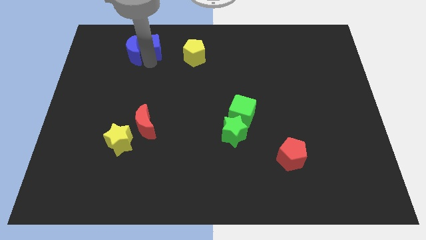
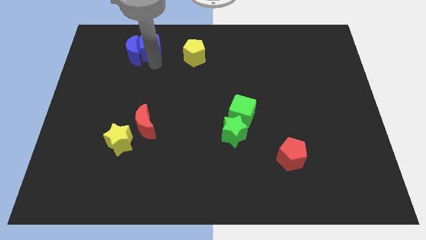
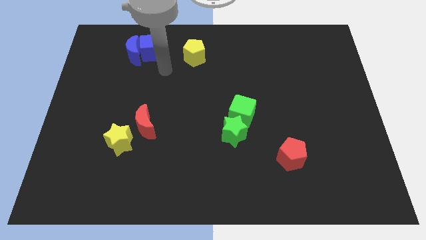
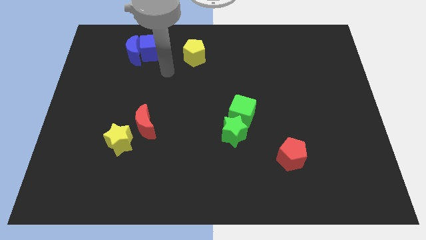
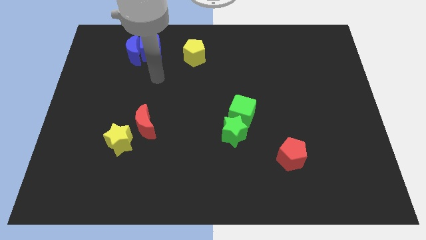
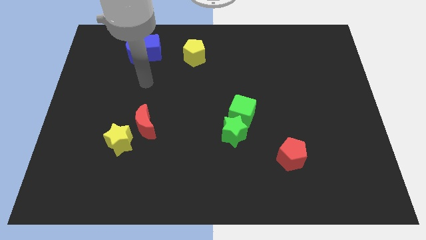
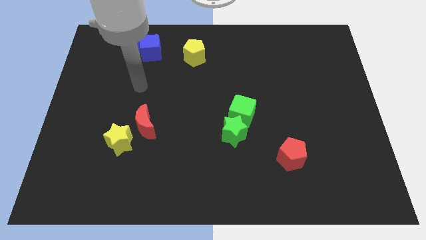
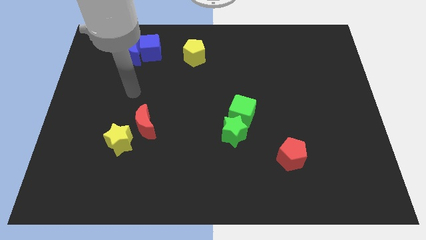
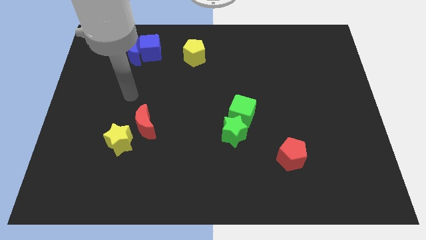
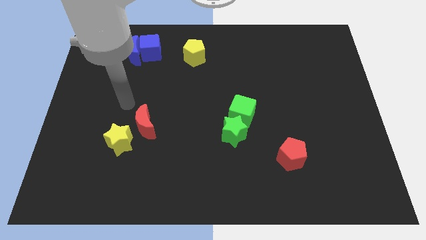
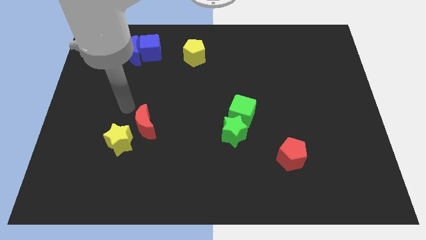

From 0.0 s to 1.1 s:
move your arm away from blue blocks

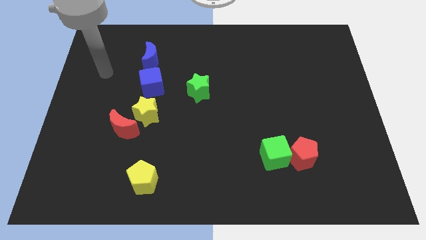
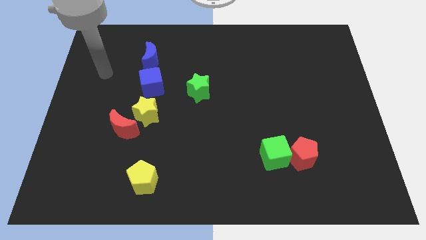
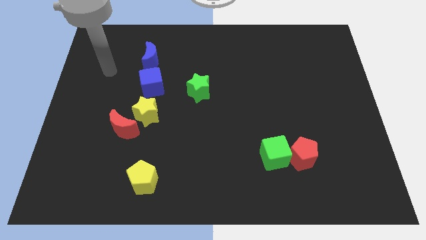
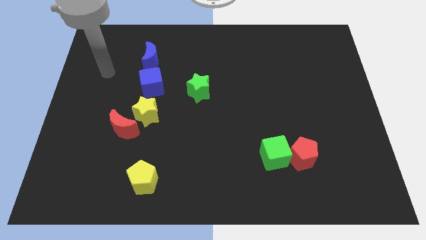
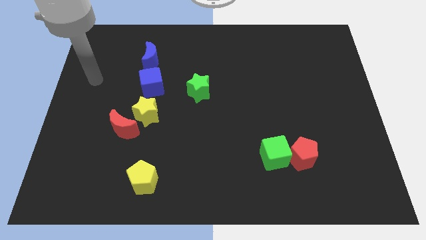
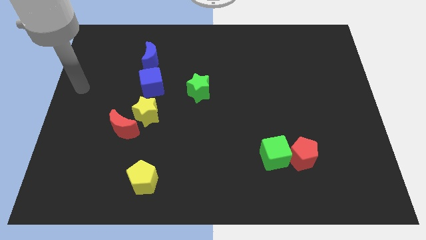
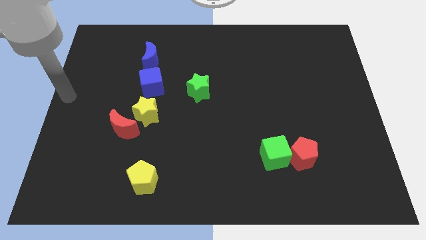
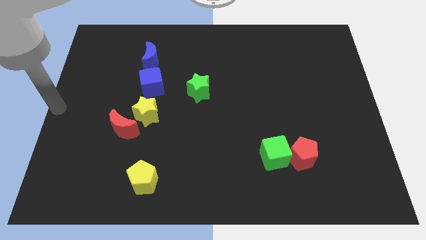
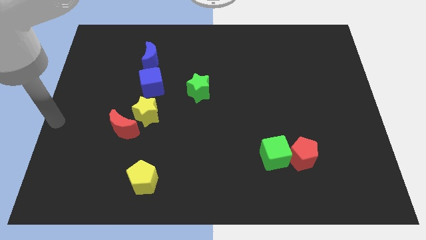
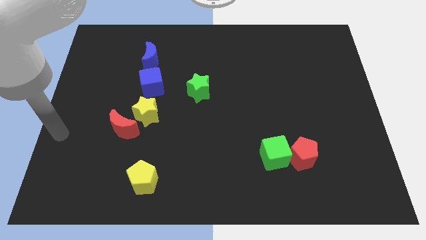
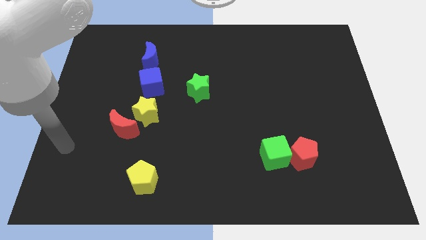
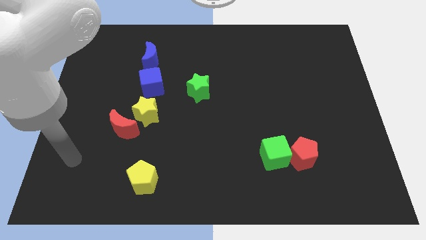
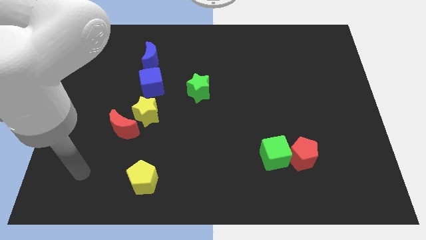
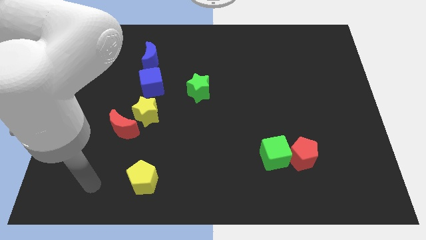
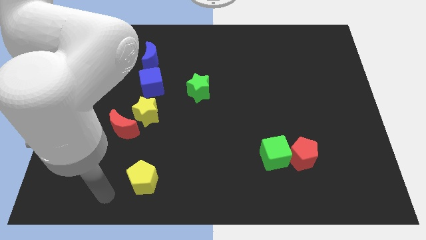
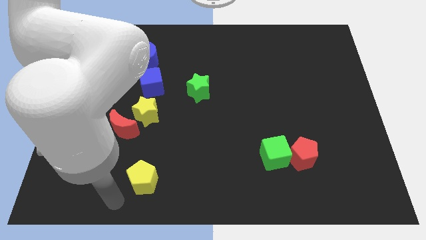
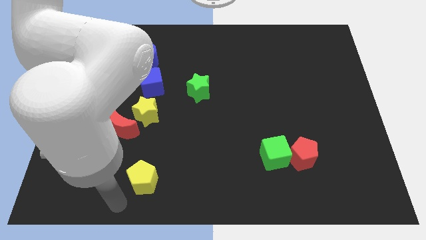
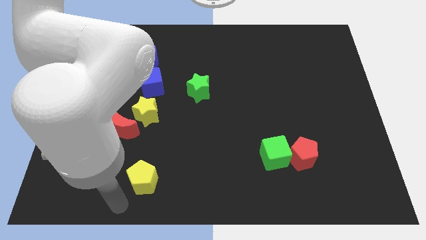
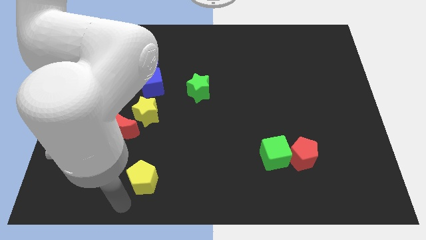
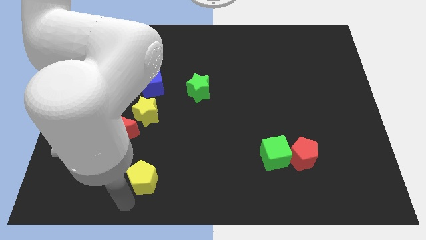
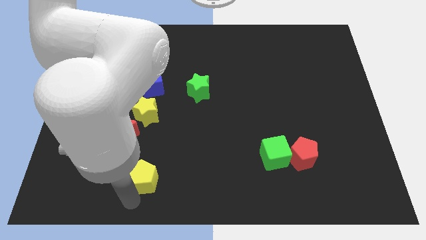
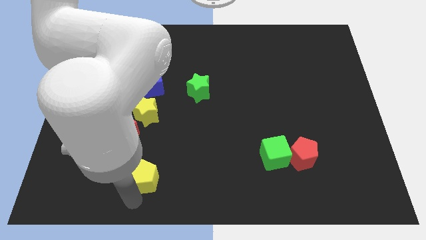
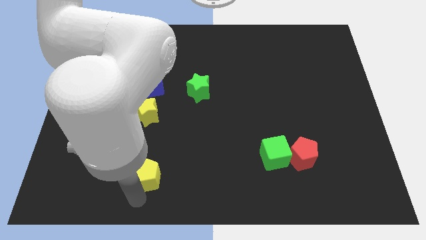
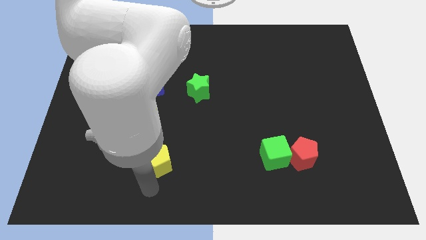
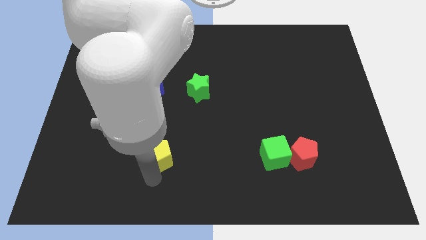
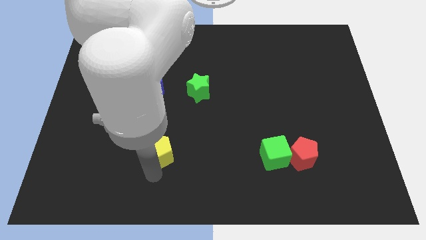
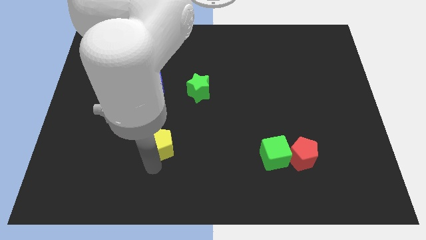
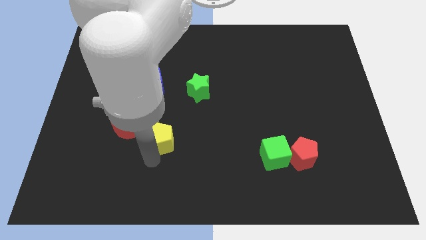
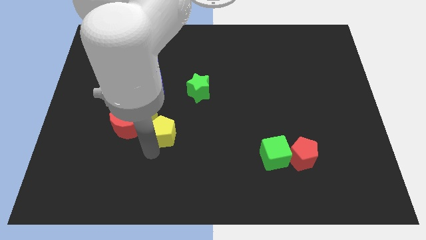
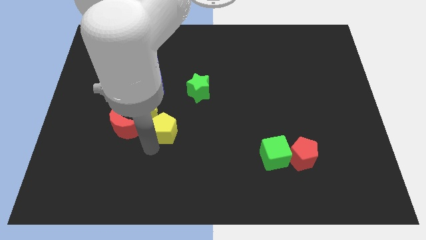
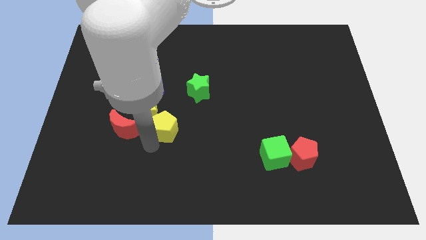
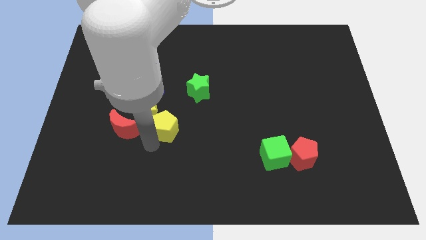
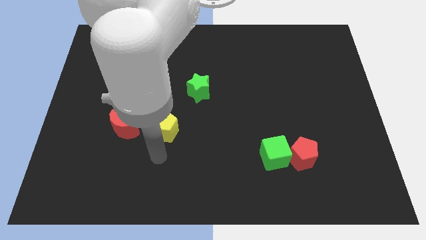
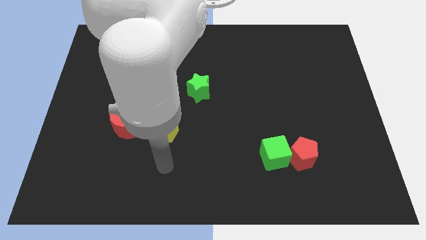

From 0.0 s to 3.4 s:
push the yellow pentagon to the right of the yellow star

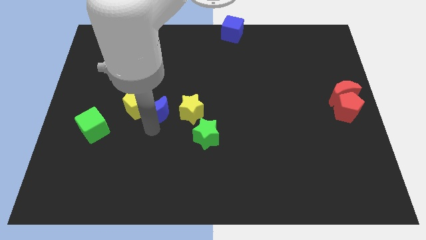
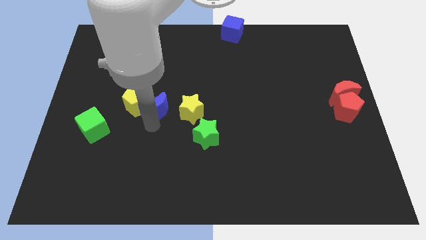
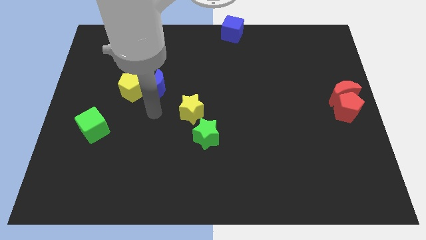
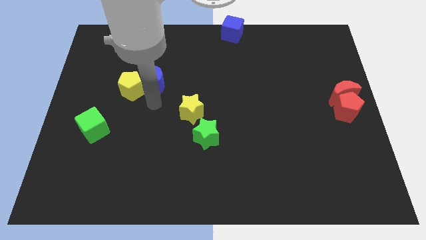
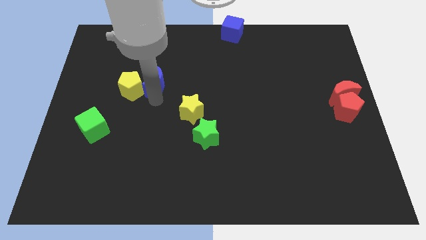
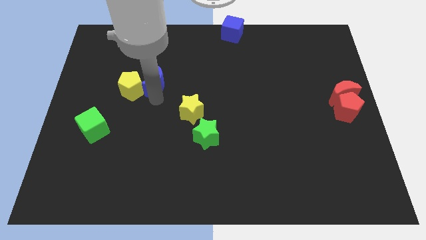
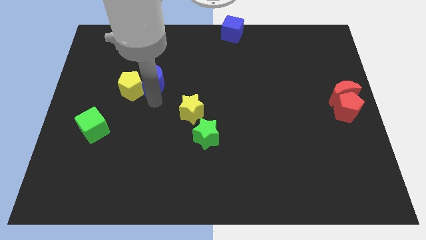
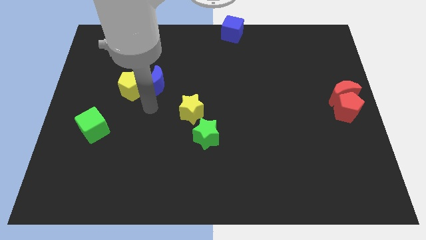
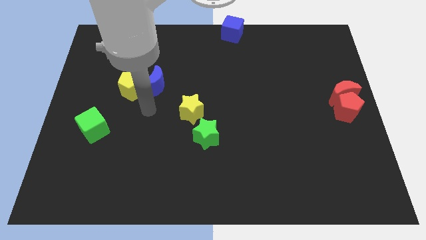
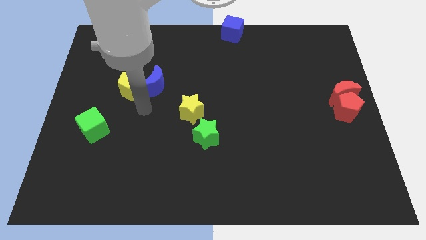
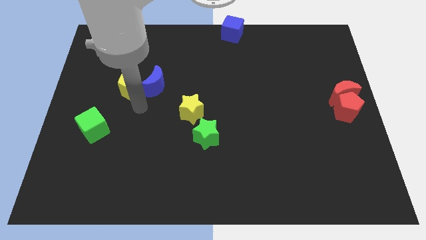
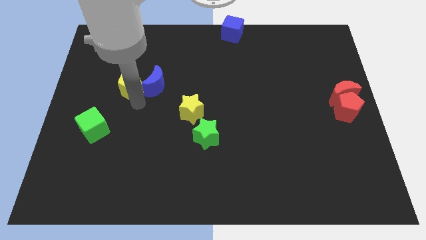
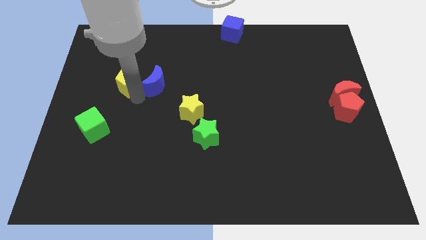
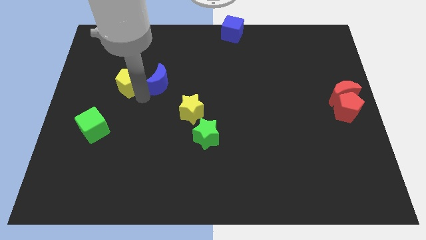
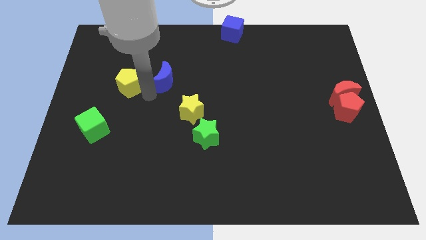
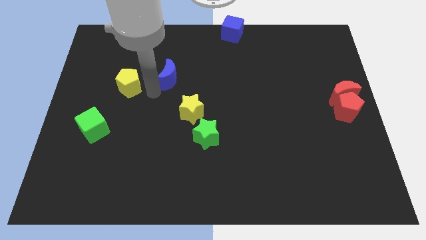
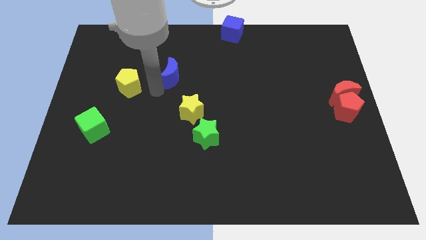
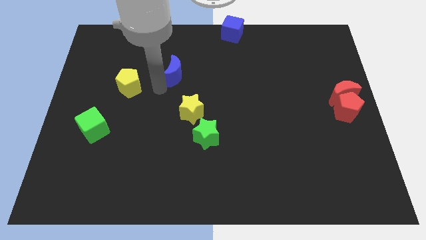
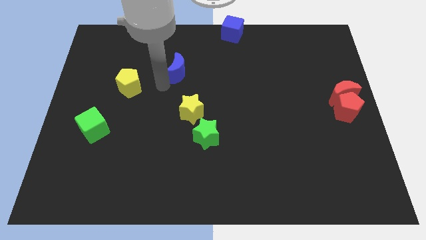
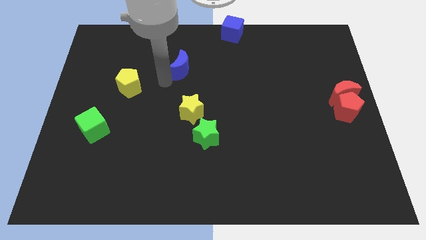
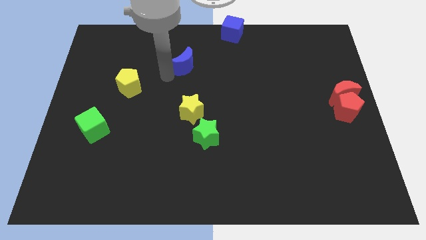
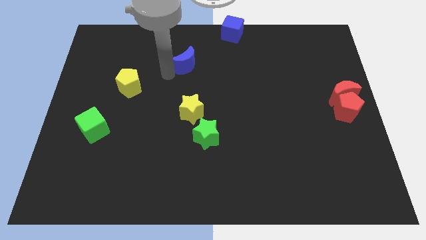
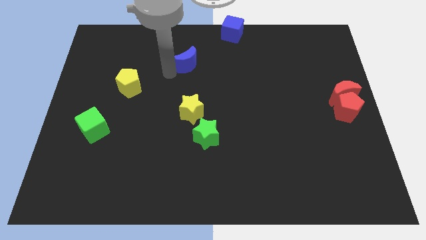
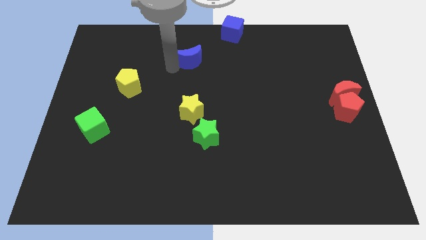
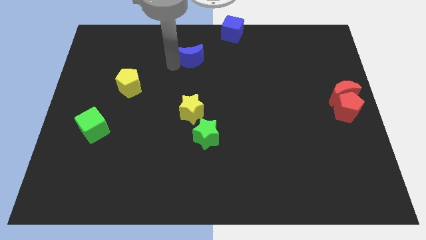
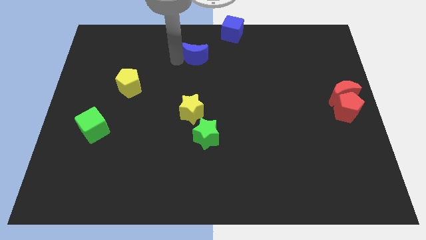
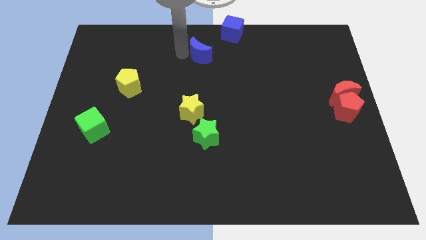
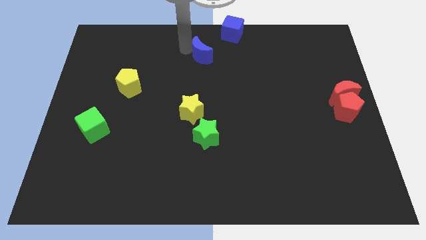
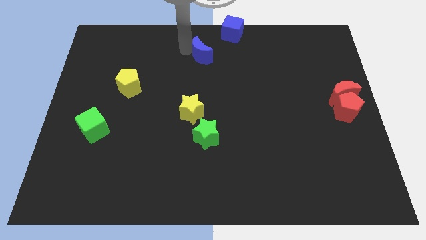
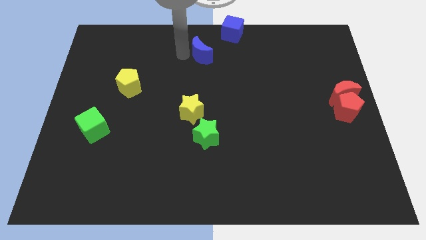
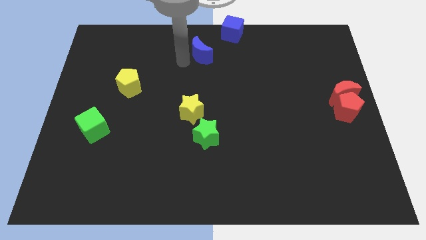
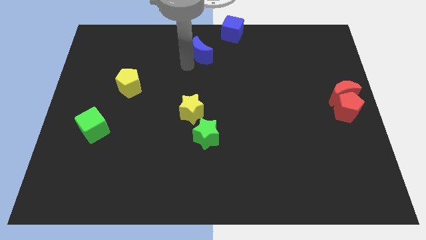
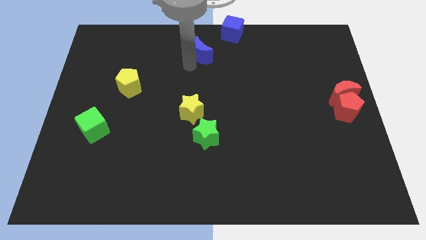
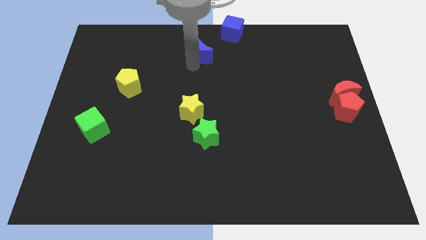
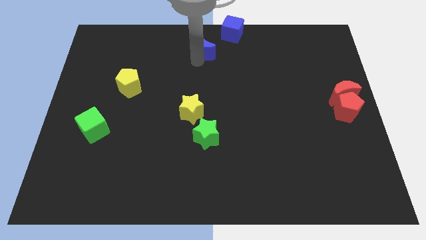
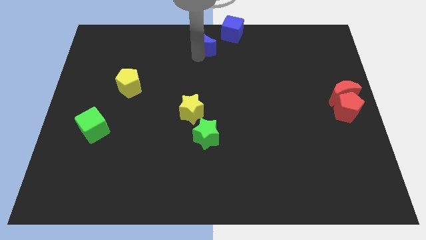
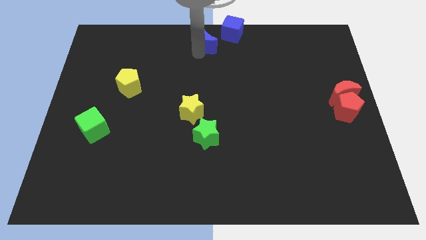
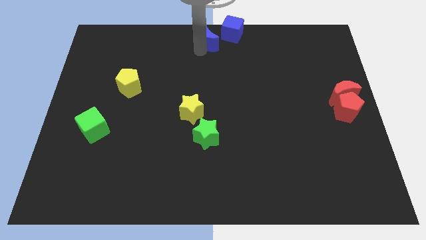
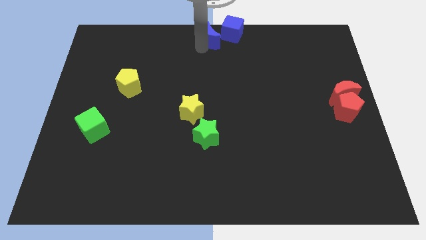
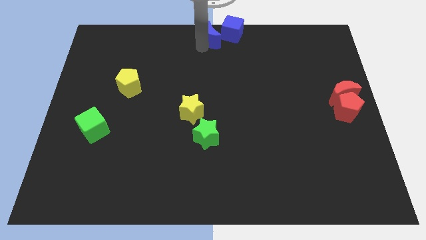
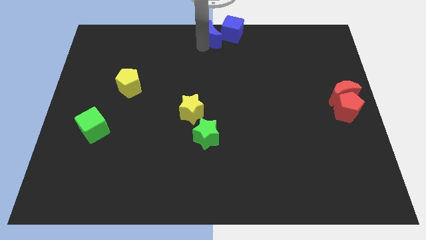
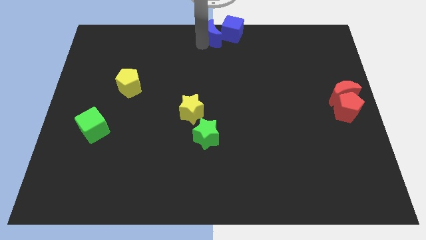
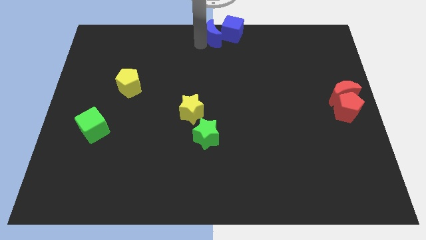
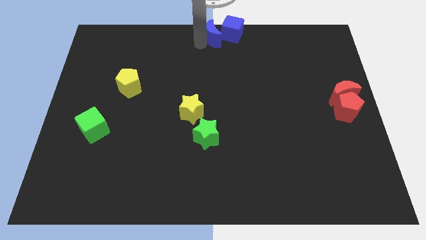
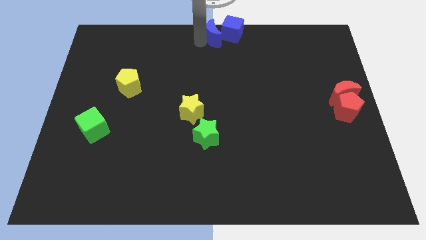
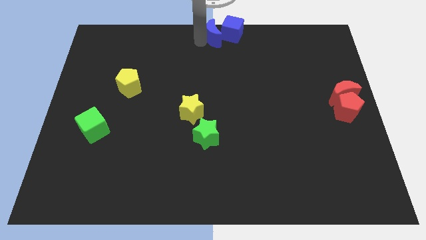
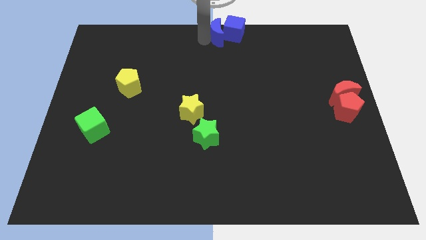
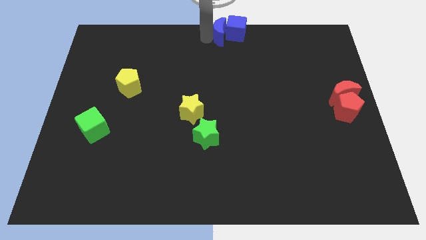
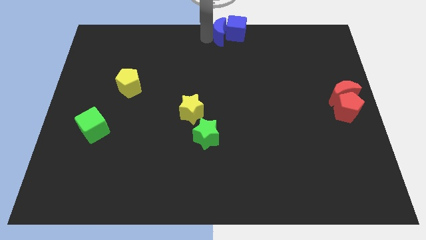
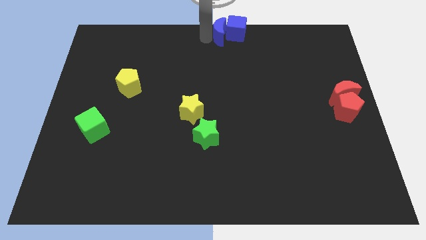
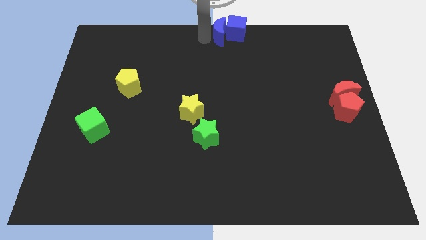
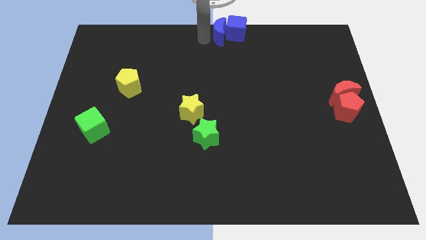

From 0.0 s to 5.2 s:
push the blue moon close to the left of the blue cube
